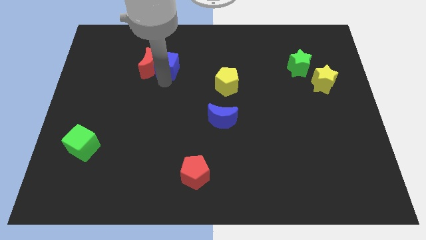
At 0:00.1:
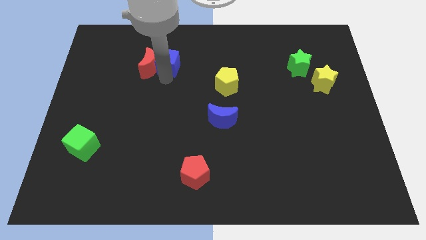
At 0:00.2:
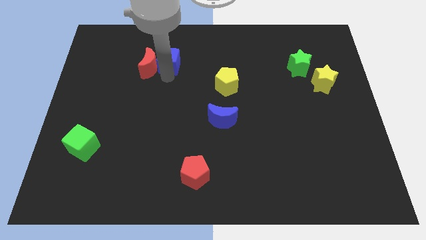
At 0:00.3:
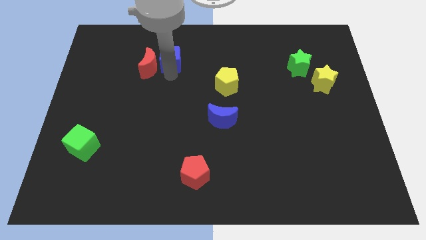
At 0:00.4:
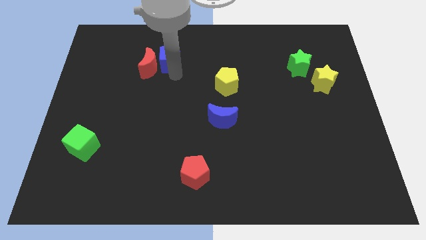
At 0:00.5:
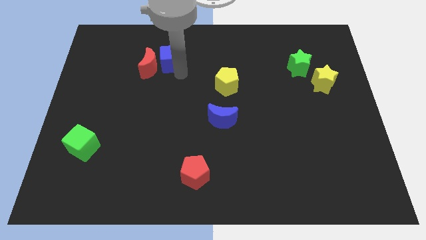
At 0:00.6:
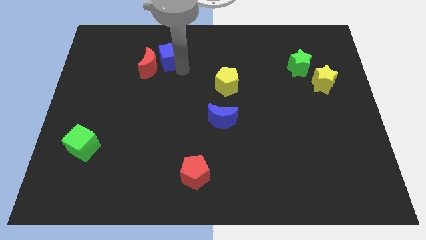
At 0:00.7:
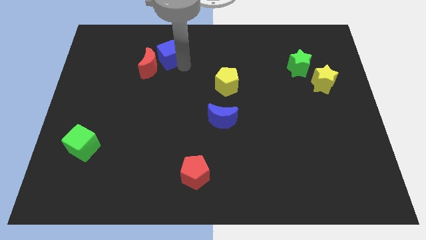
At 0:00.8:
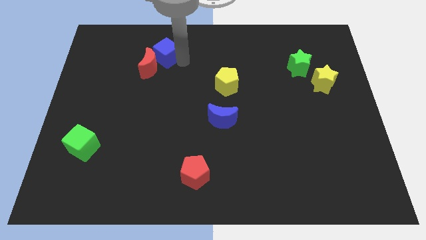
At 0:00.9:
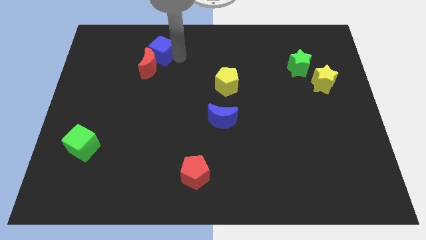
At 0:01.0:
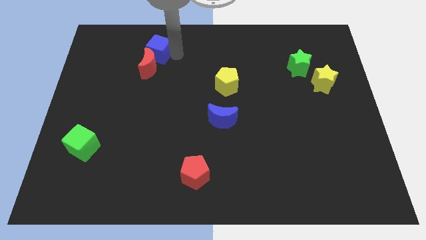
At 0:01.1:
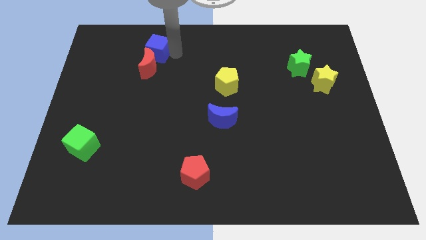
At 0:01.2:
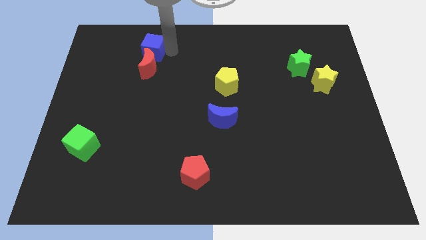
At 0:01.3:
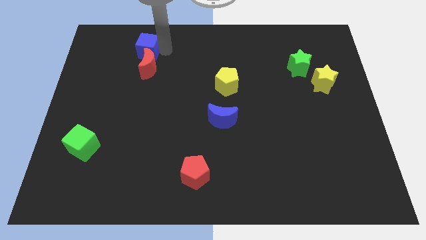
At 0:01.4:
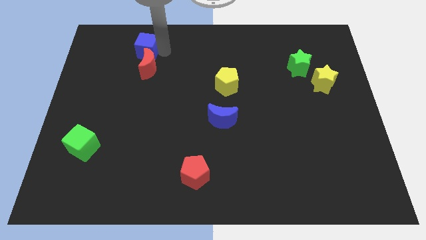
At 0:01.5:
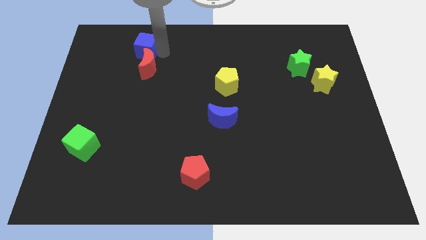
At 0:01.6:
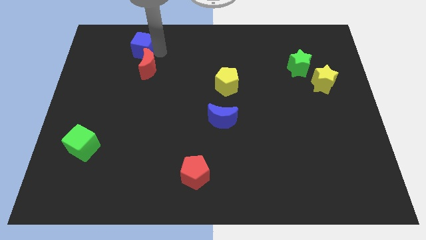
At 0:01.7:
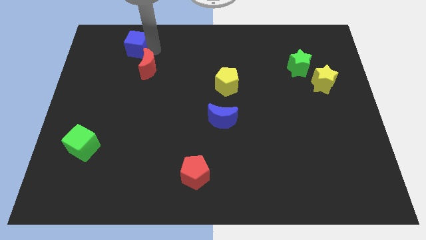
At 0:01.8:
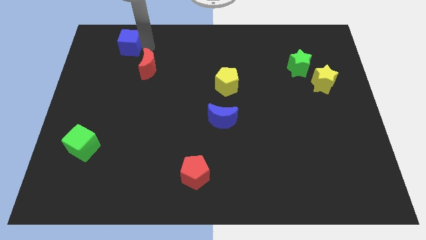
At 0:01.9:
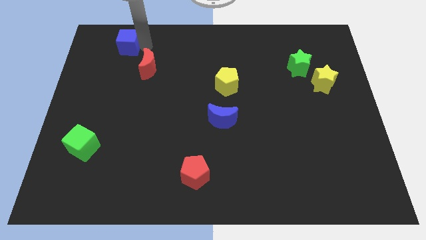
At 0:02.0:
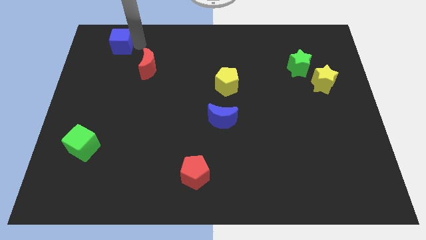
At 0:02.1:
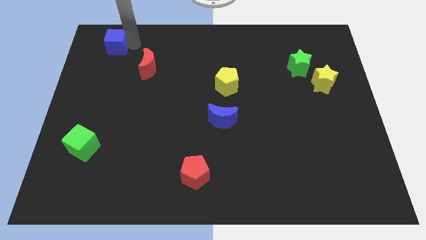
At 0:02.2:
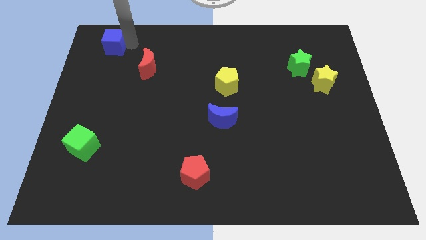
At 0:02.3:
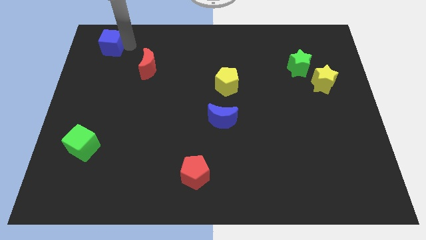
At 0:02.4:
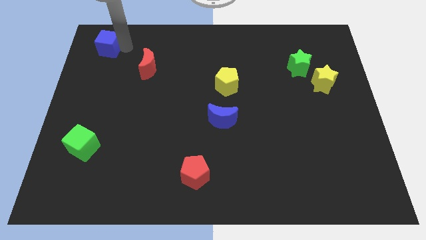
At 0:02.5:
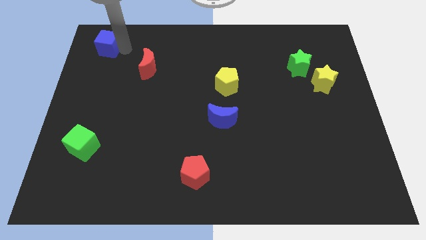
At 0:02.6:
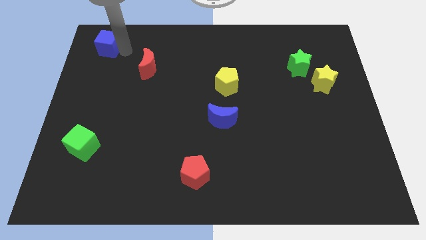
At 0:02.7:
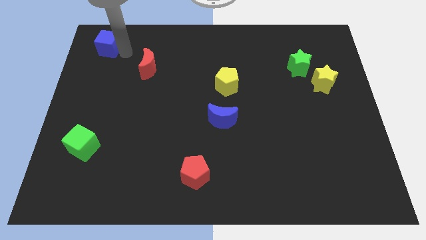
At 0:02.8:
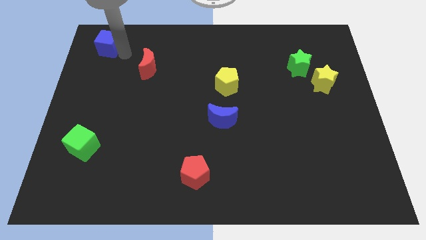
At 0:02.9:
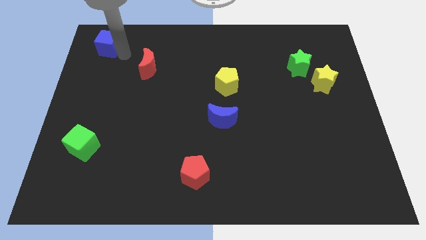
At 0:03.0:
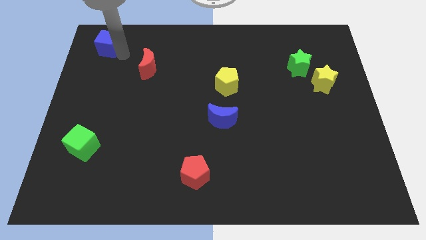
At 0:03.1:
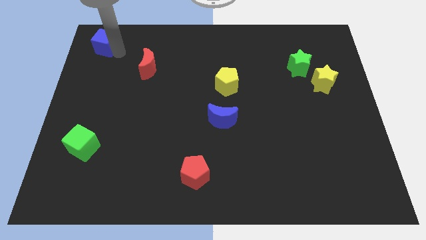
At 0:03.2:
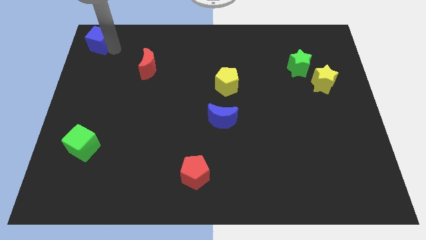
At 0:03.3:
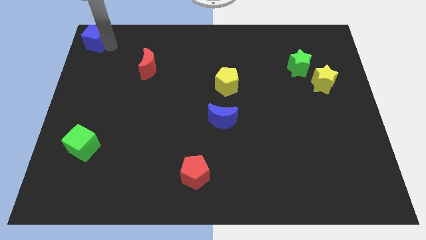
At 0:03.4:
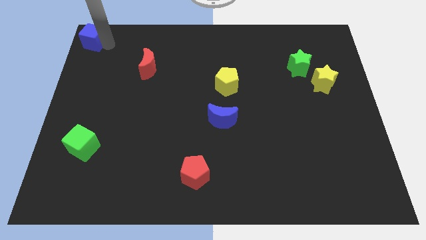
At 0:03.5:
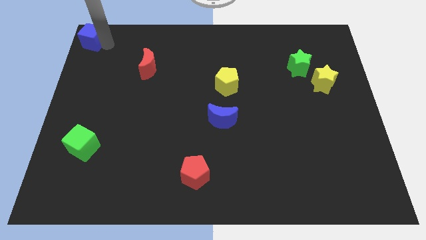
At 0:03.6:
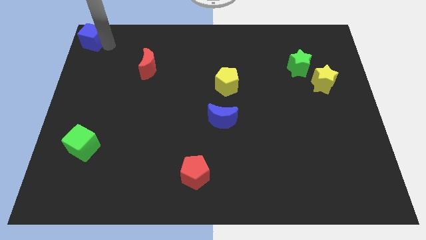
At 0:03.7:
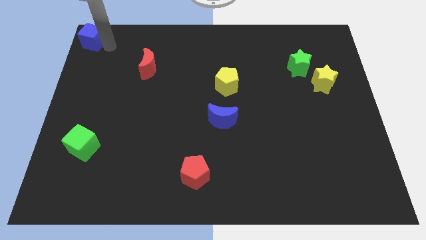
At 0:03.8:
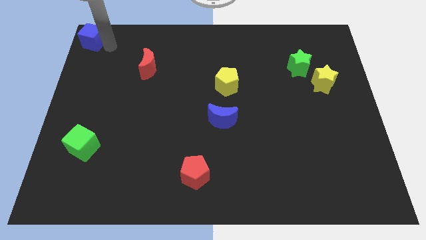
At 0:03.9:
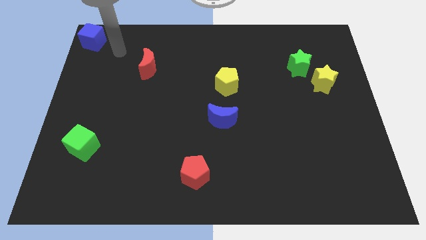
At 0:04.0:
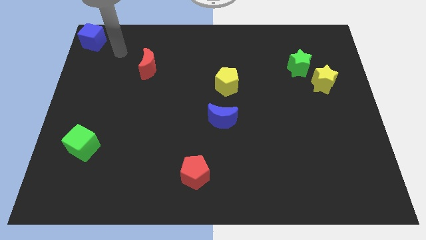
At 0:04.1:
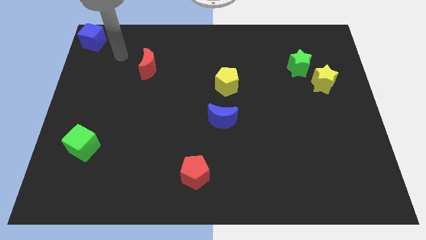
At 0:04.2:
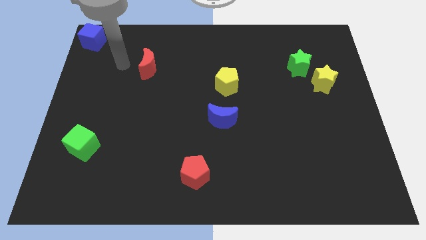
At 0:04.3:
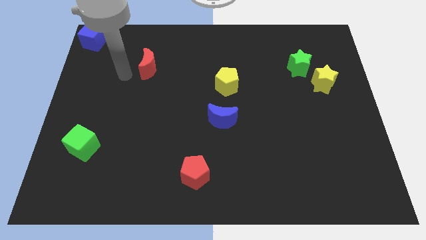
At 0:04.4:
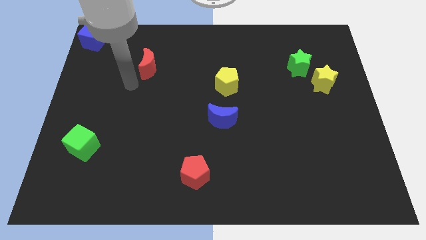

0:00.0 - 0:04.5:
move the blue cube left top corner

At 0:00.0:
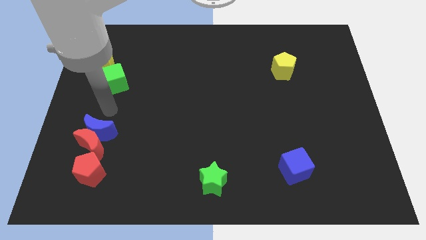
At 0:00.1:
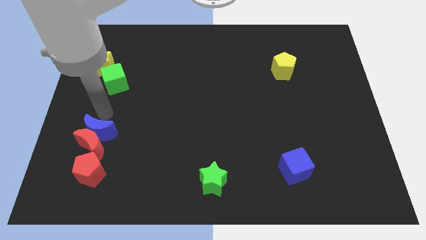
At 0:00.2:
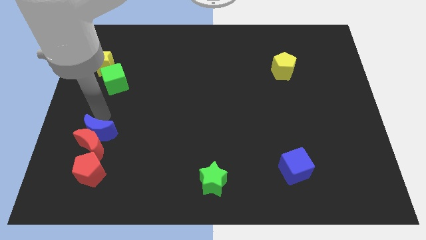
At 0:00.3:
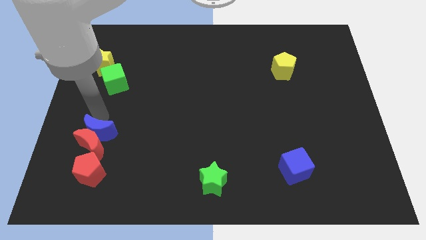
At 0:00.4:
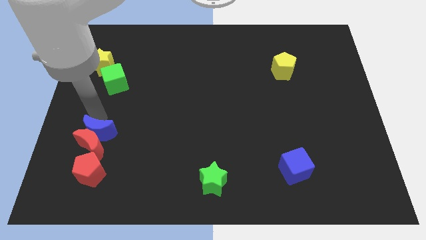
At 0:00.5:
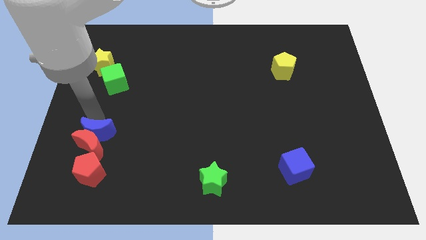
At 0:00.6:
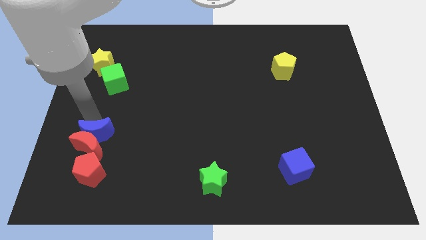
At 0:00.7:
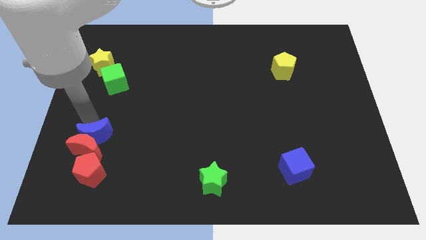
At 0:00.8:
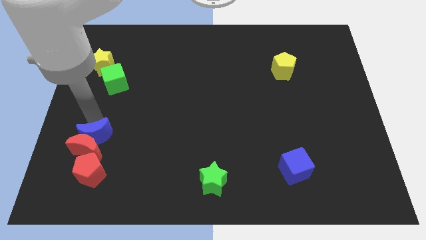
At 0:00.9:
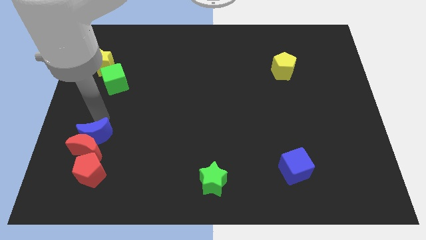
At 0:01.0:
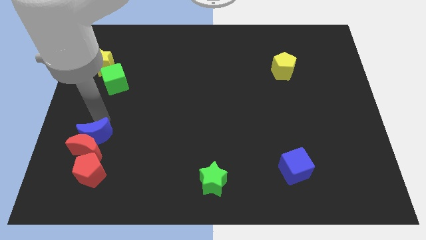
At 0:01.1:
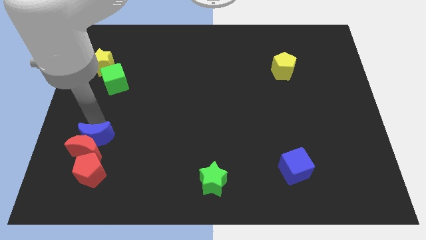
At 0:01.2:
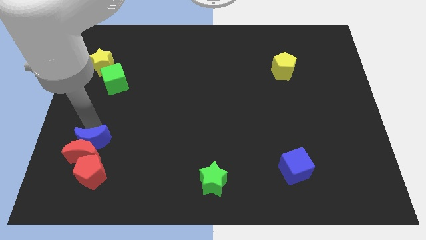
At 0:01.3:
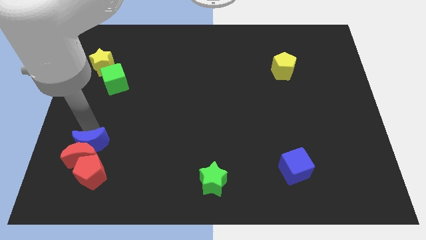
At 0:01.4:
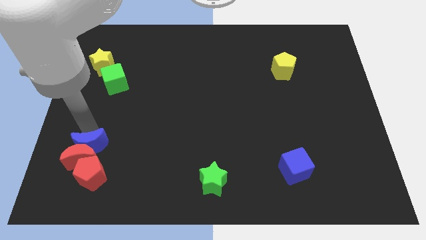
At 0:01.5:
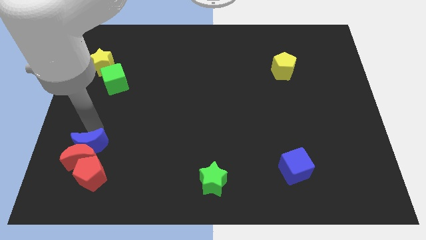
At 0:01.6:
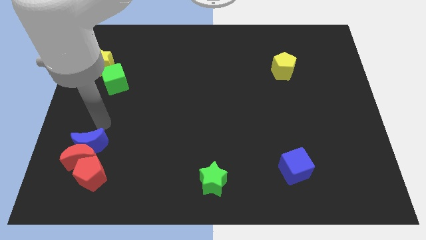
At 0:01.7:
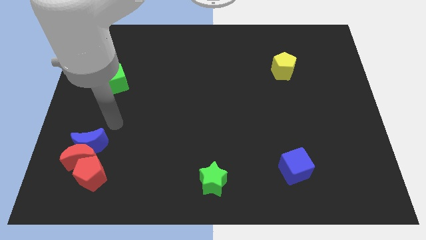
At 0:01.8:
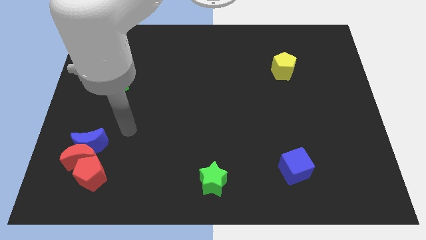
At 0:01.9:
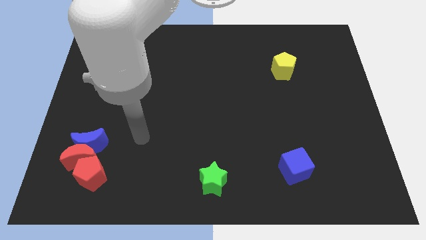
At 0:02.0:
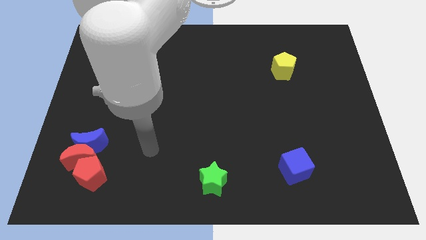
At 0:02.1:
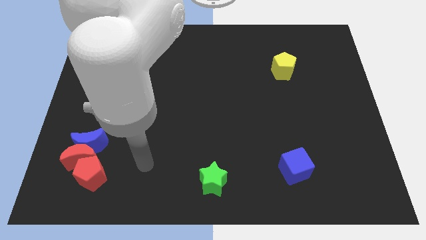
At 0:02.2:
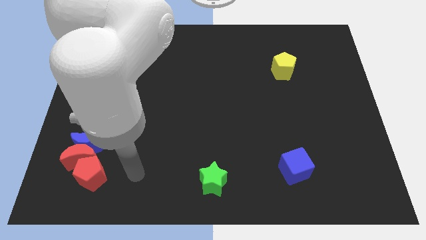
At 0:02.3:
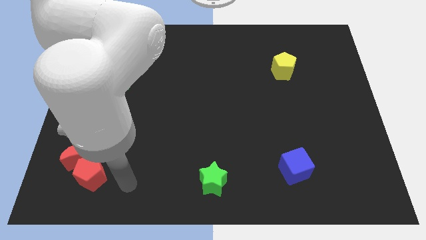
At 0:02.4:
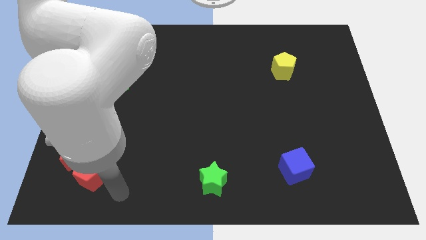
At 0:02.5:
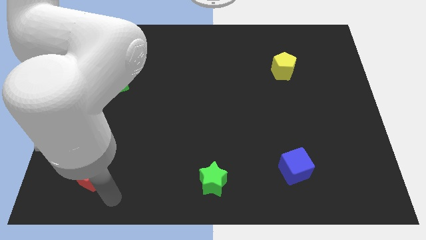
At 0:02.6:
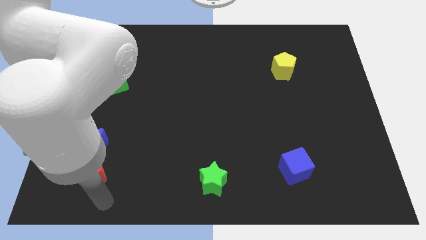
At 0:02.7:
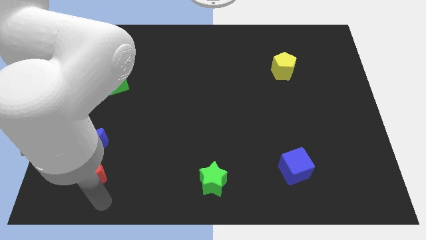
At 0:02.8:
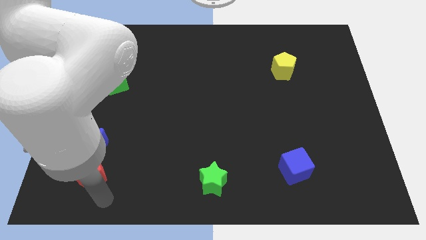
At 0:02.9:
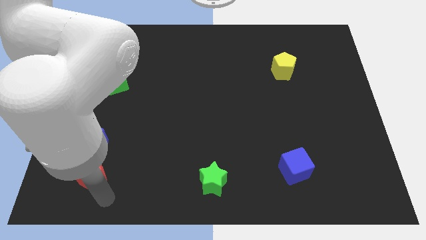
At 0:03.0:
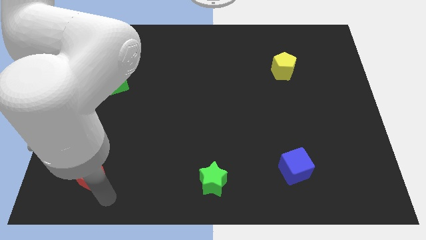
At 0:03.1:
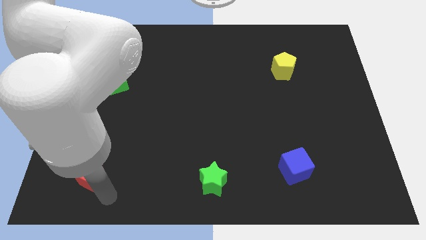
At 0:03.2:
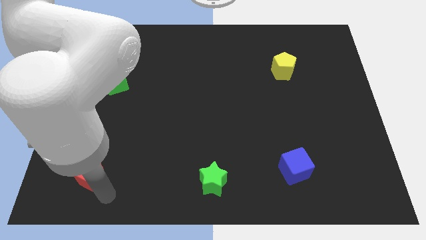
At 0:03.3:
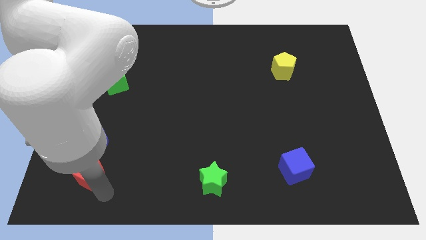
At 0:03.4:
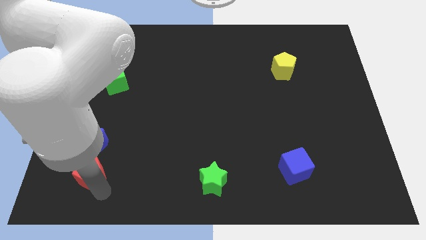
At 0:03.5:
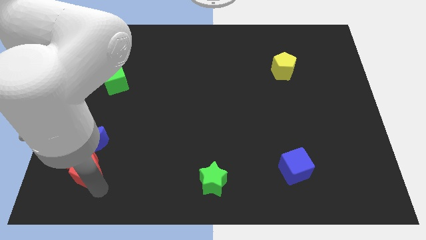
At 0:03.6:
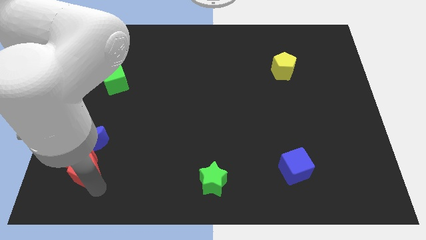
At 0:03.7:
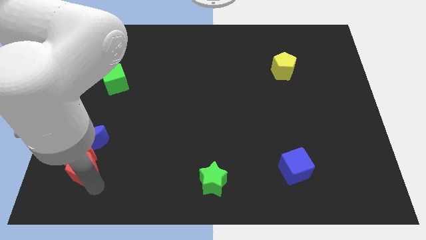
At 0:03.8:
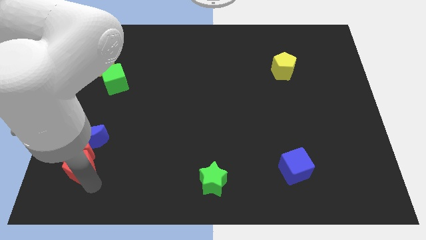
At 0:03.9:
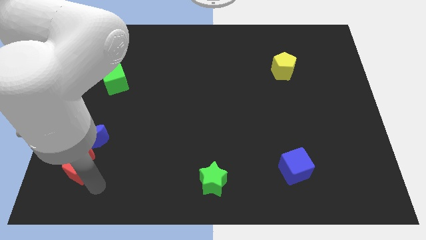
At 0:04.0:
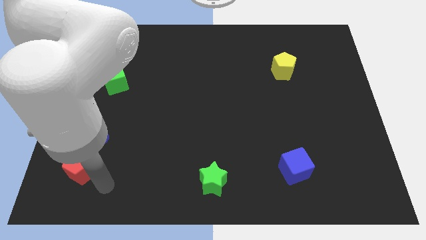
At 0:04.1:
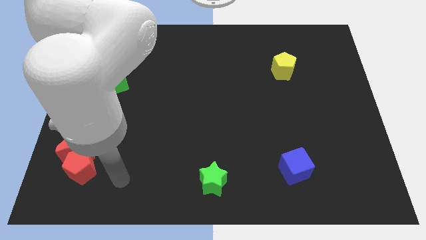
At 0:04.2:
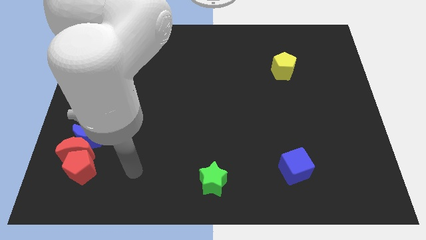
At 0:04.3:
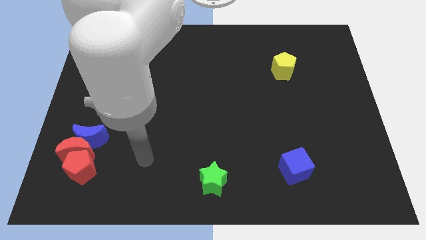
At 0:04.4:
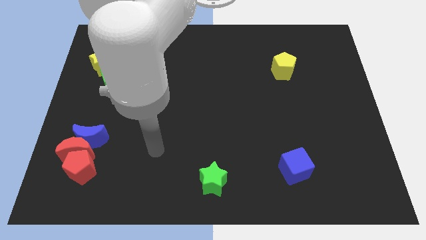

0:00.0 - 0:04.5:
adjust the blue crescent and the red blocks at the bottom left of the board
